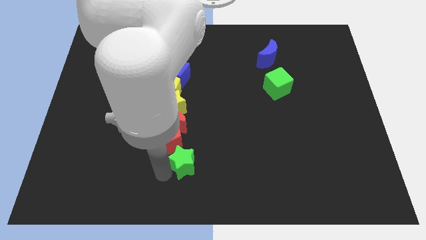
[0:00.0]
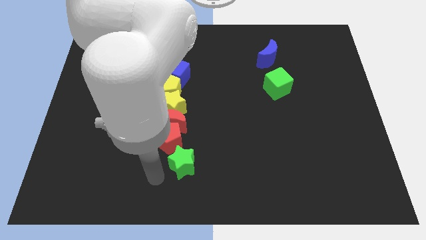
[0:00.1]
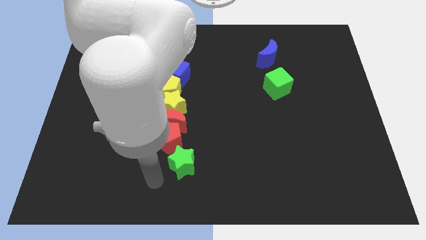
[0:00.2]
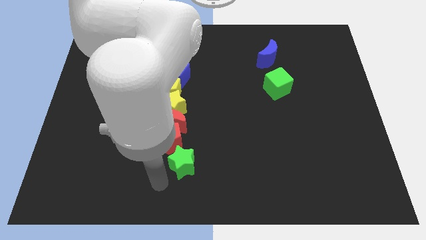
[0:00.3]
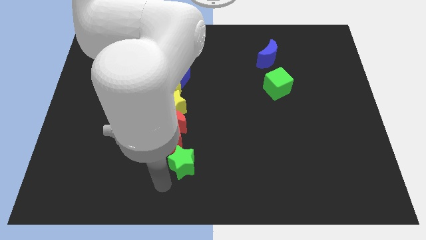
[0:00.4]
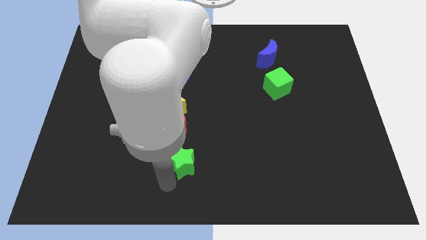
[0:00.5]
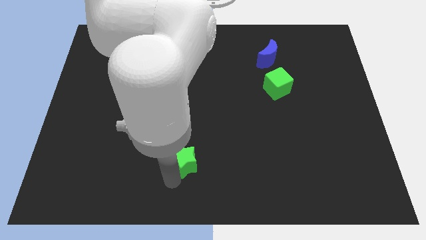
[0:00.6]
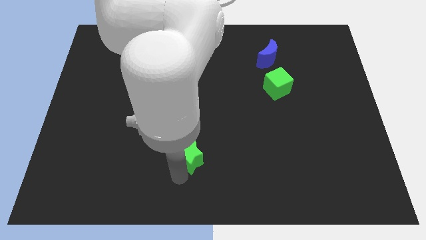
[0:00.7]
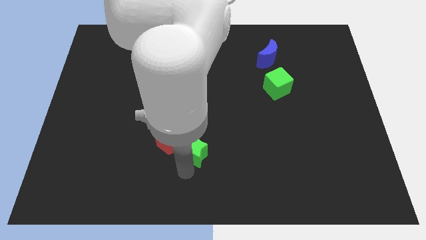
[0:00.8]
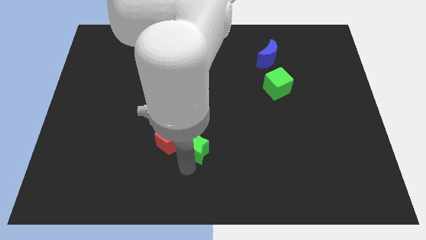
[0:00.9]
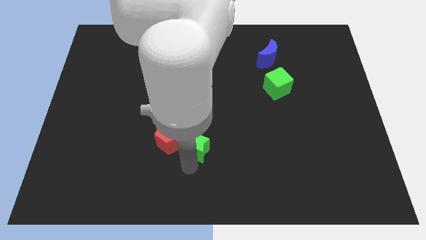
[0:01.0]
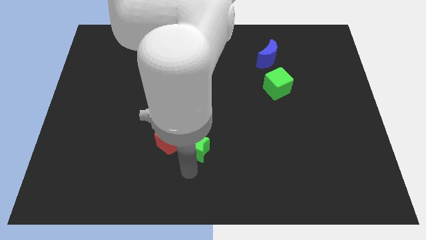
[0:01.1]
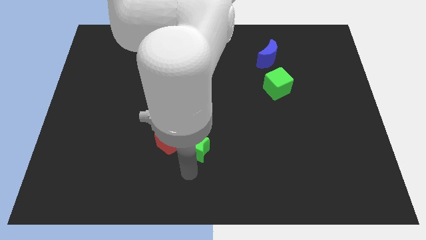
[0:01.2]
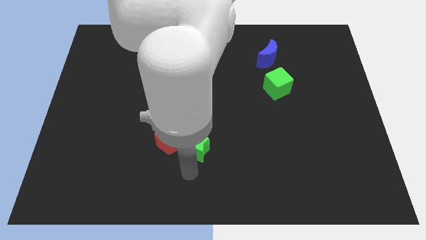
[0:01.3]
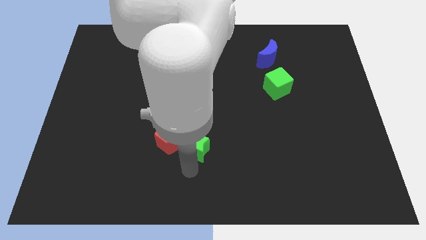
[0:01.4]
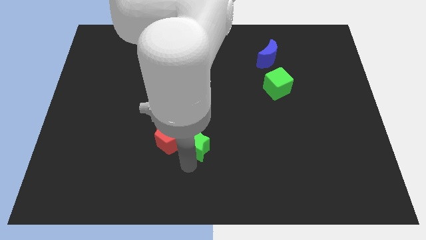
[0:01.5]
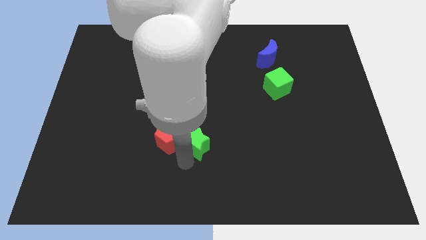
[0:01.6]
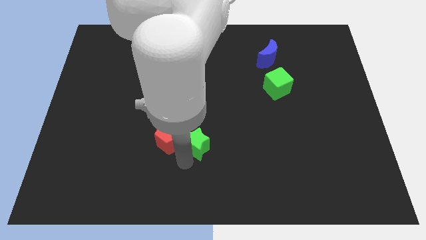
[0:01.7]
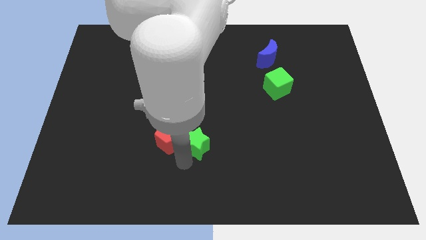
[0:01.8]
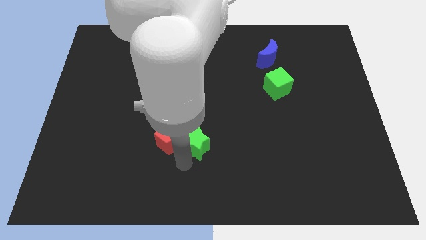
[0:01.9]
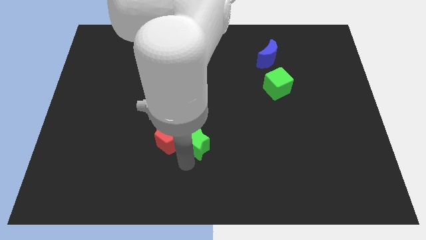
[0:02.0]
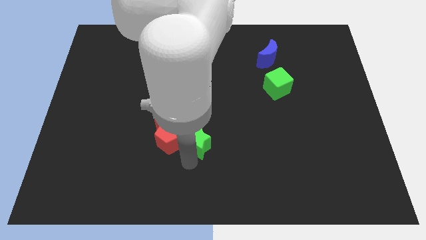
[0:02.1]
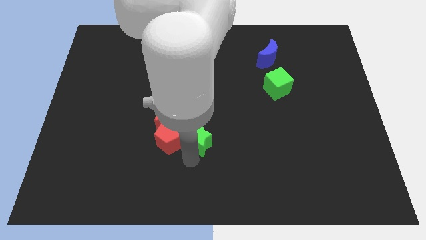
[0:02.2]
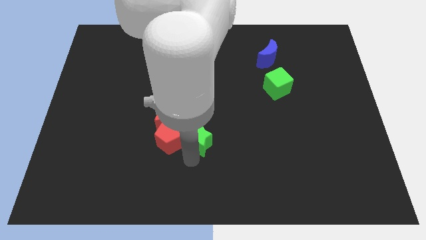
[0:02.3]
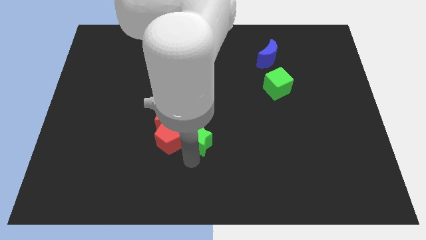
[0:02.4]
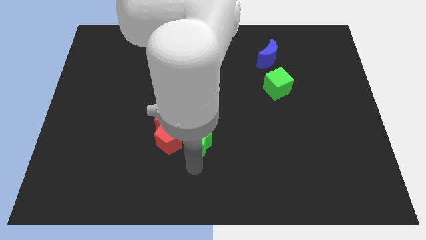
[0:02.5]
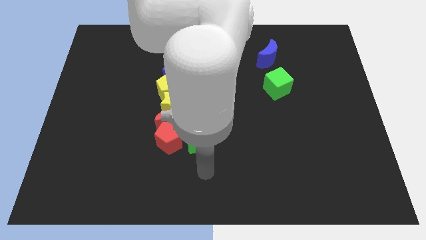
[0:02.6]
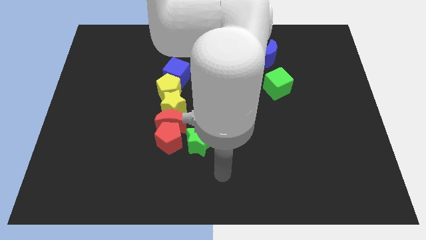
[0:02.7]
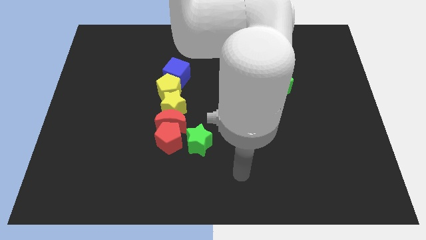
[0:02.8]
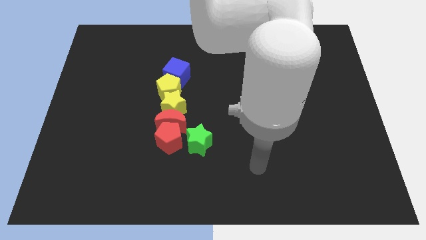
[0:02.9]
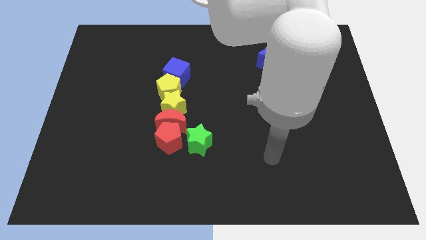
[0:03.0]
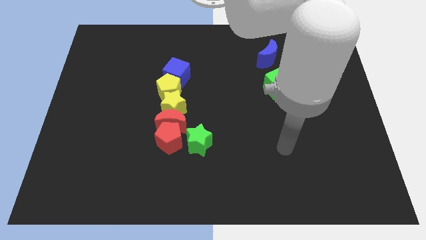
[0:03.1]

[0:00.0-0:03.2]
move the green star horizontally on the right side of the red pentagon

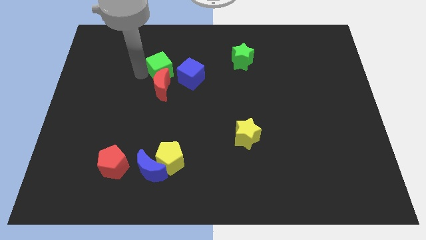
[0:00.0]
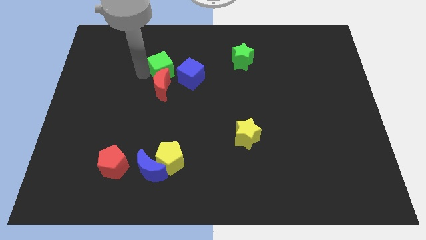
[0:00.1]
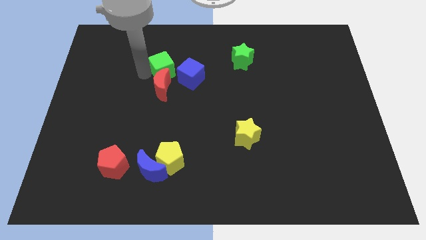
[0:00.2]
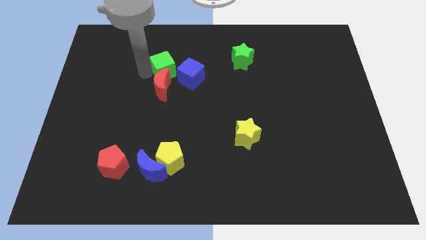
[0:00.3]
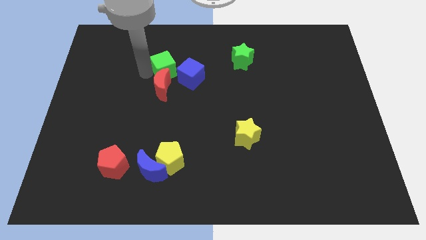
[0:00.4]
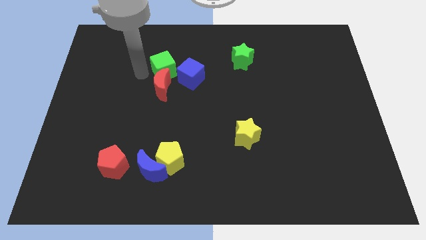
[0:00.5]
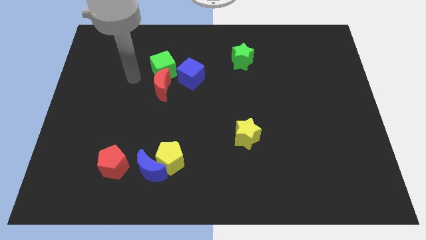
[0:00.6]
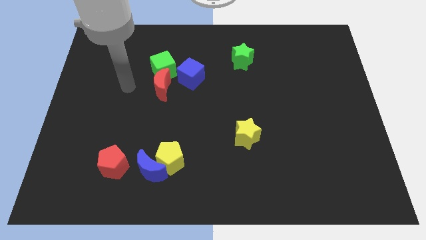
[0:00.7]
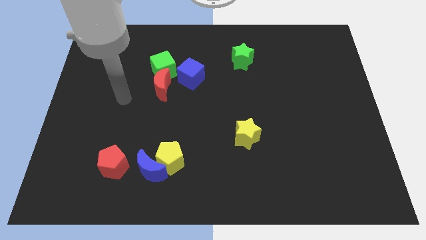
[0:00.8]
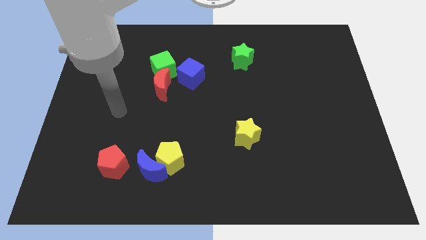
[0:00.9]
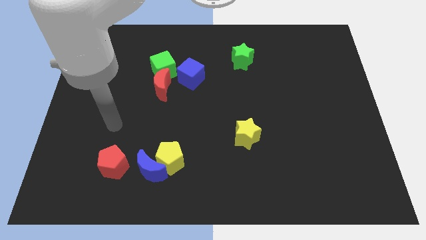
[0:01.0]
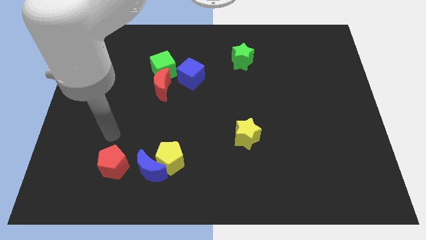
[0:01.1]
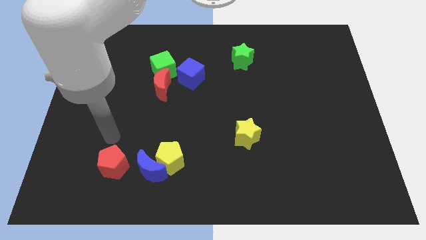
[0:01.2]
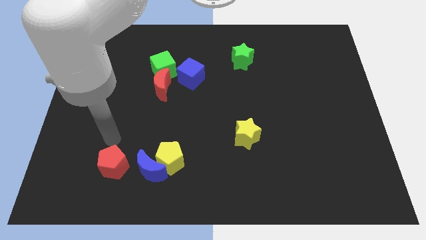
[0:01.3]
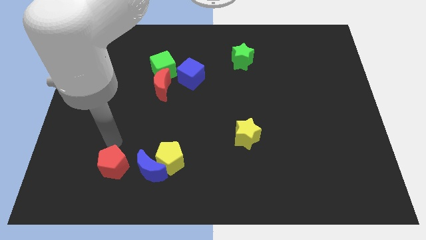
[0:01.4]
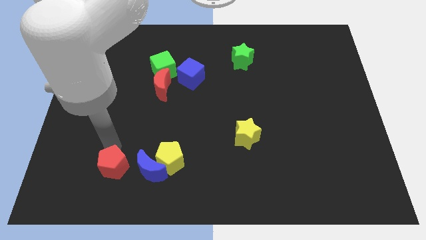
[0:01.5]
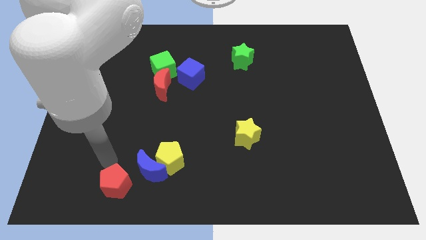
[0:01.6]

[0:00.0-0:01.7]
point your arm at the top side of the red pentagon

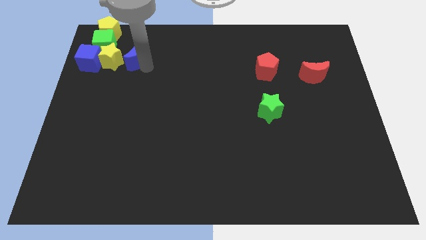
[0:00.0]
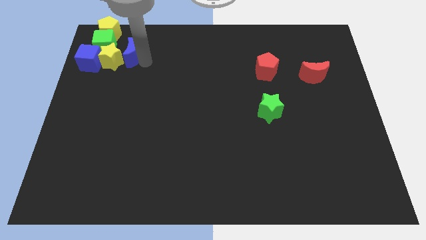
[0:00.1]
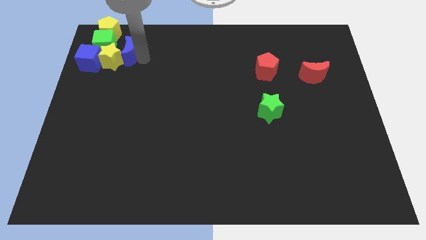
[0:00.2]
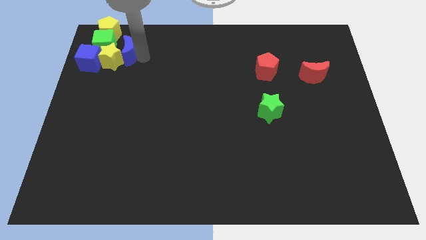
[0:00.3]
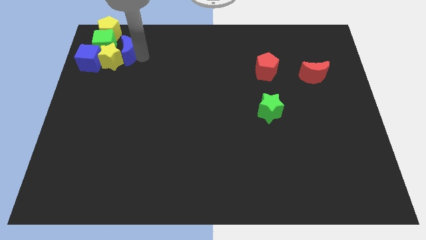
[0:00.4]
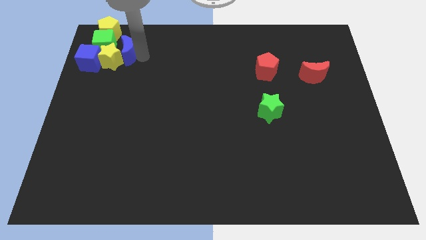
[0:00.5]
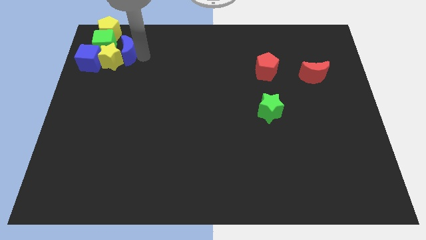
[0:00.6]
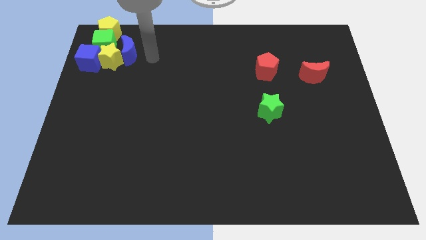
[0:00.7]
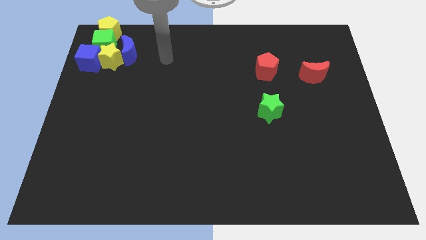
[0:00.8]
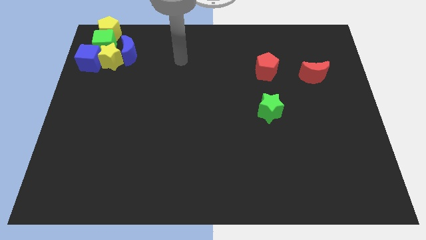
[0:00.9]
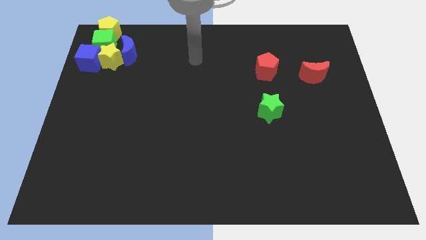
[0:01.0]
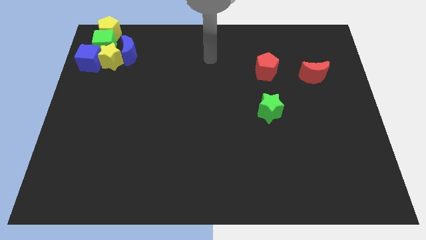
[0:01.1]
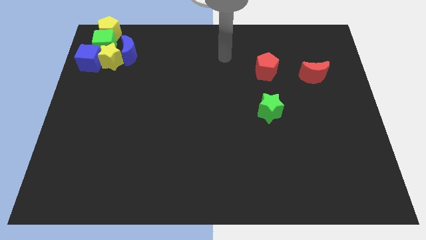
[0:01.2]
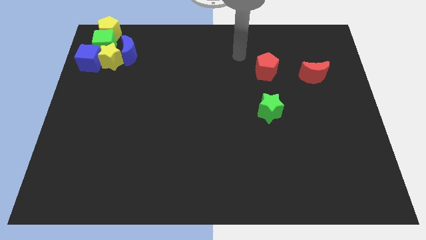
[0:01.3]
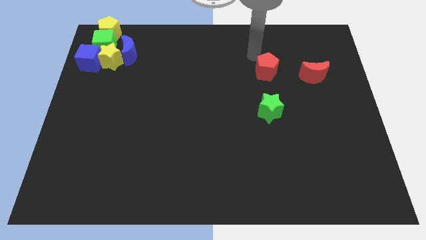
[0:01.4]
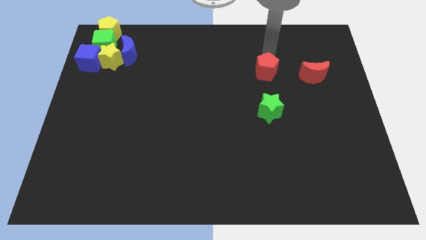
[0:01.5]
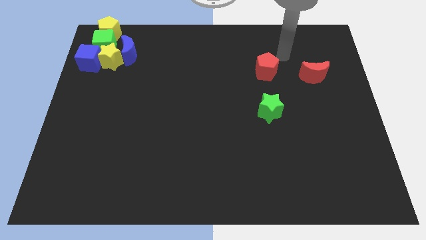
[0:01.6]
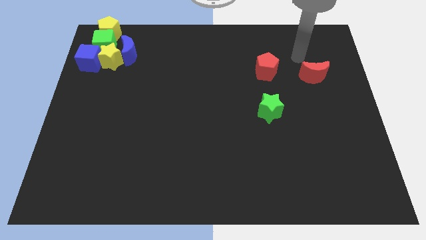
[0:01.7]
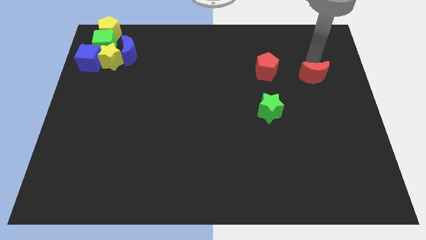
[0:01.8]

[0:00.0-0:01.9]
place the blue crescent towards the top right side of the yellow star

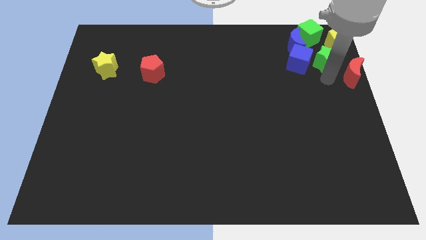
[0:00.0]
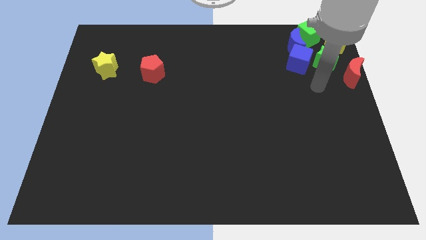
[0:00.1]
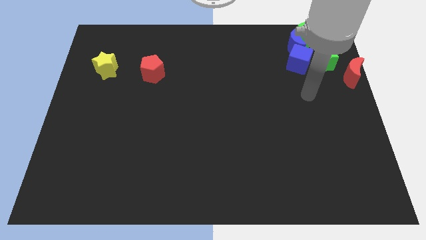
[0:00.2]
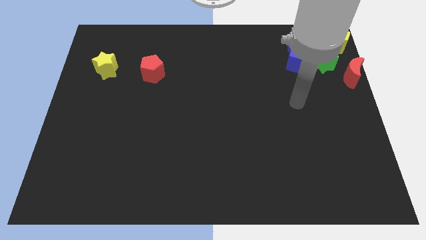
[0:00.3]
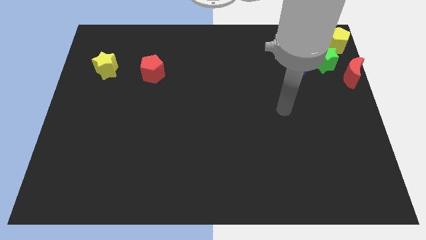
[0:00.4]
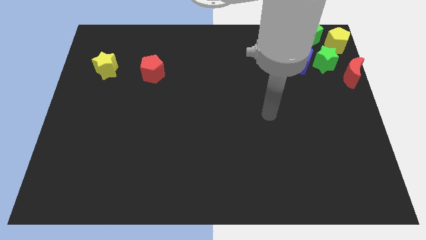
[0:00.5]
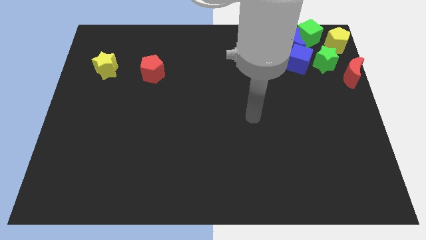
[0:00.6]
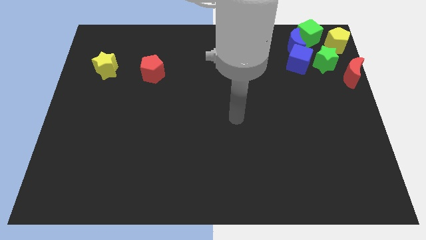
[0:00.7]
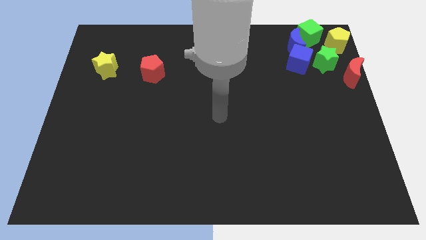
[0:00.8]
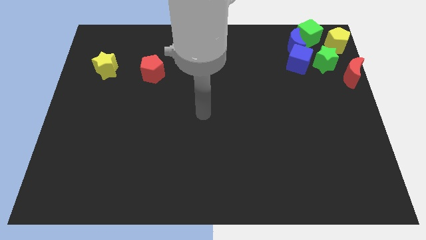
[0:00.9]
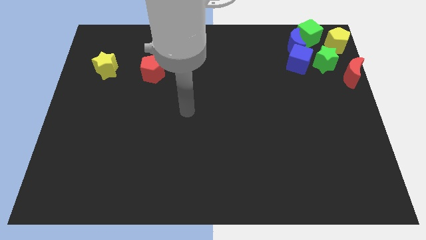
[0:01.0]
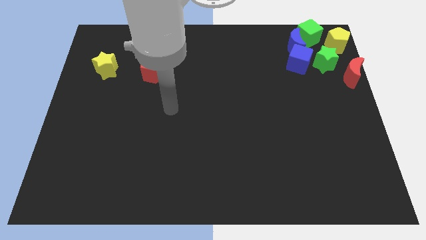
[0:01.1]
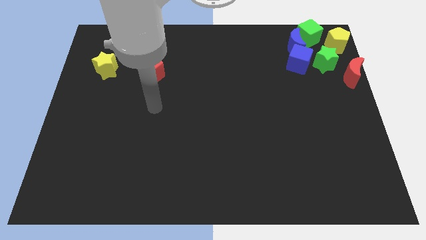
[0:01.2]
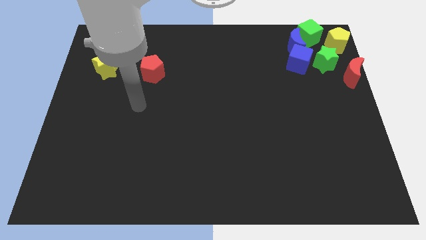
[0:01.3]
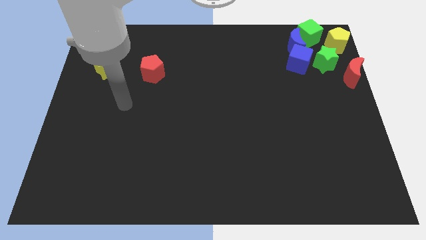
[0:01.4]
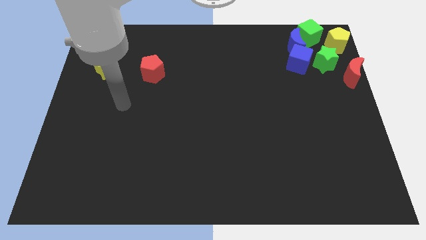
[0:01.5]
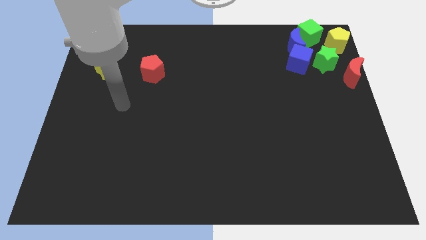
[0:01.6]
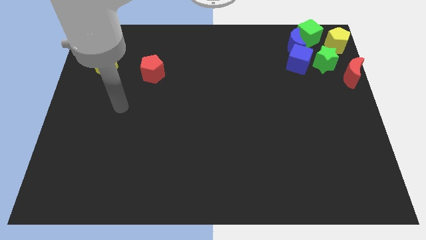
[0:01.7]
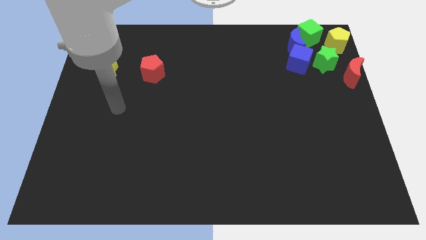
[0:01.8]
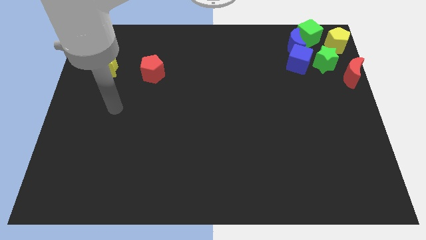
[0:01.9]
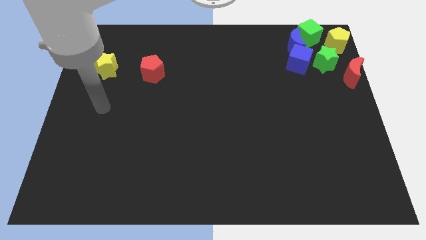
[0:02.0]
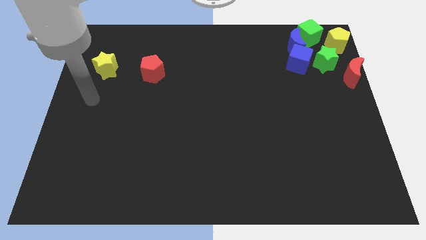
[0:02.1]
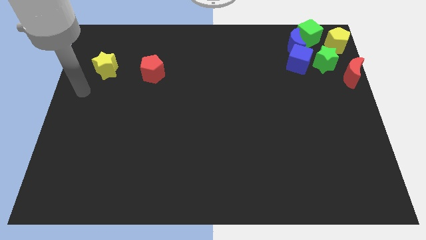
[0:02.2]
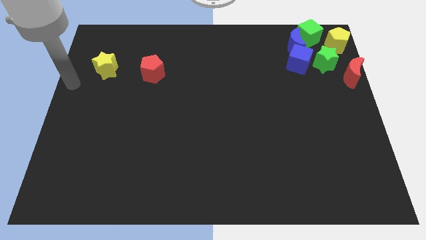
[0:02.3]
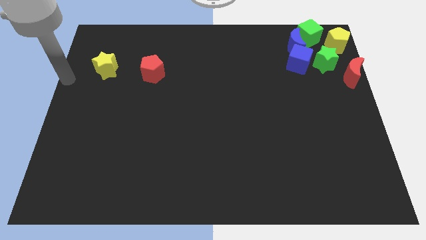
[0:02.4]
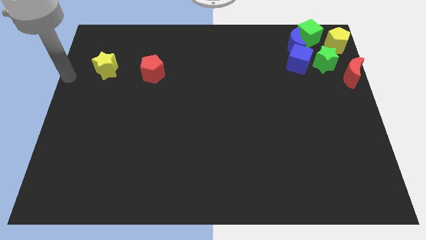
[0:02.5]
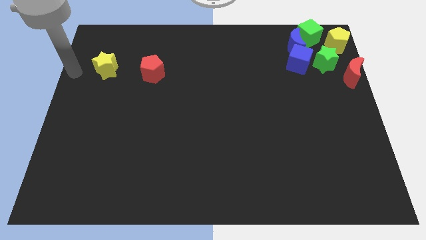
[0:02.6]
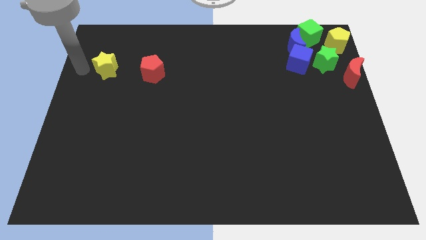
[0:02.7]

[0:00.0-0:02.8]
move your arm and point to the left of yellow star
